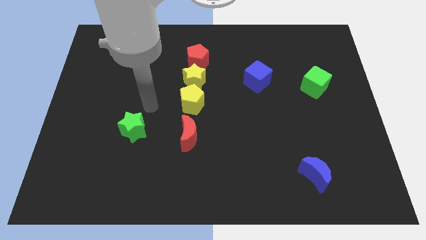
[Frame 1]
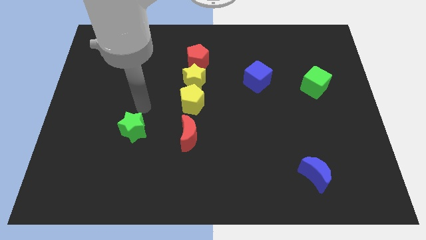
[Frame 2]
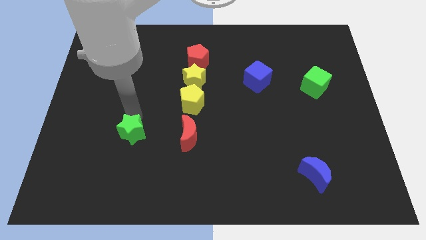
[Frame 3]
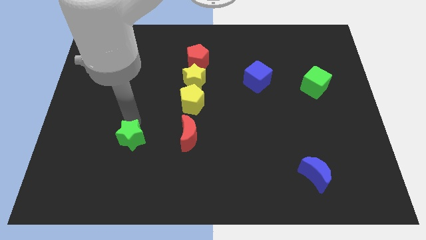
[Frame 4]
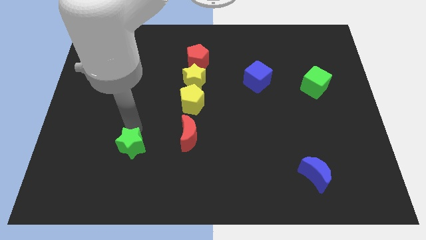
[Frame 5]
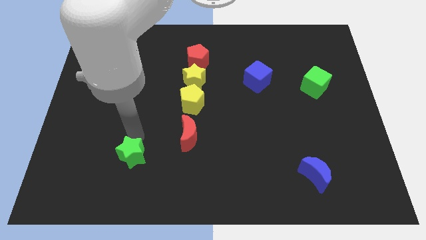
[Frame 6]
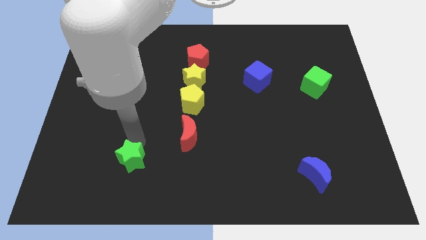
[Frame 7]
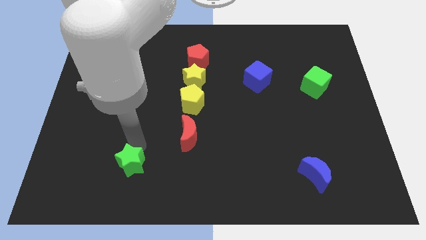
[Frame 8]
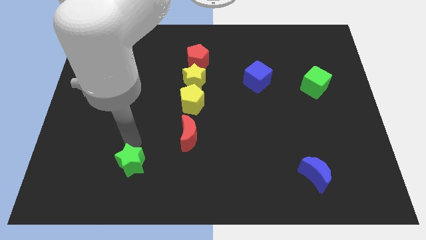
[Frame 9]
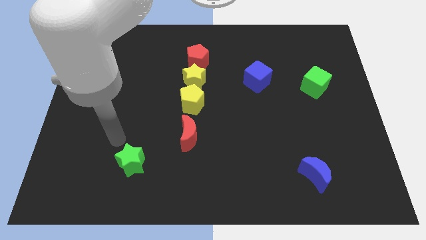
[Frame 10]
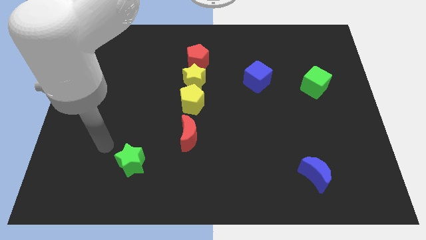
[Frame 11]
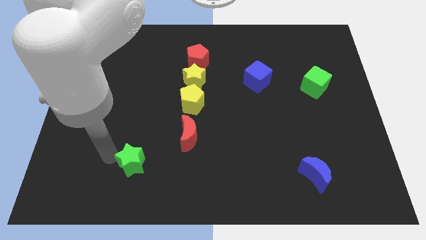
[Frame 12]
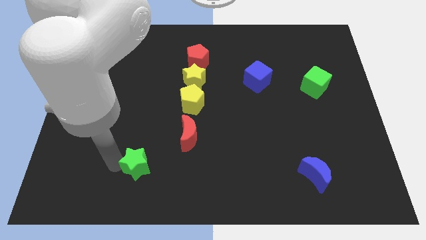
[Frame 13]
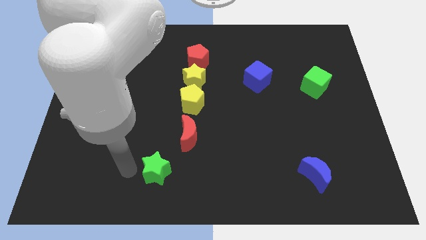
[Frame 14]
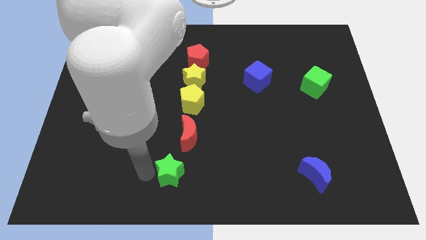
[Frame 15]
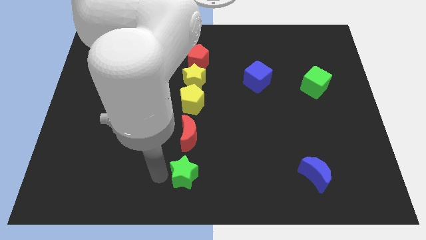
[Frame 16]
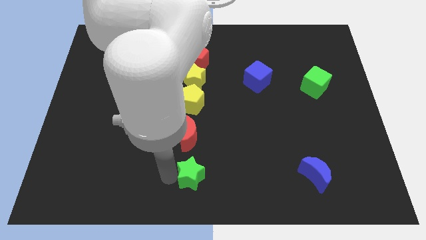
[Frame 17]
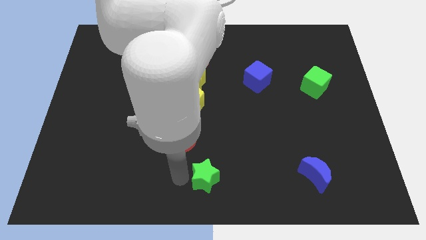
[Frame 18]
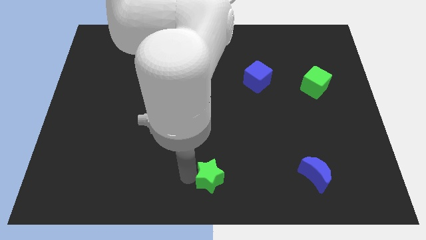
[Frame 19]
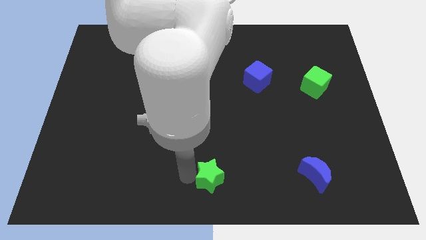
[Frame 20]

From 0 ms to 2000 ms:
push the green star towards the right of red moon

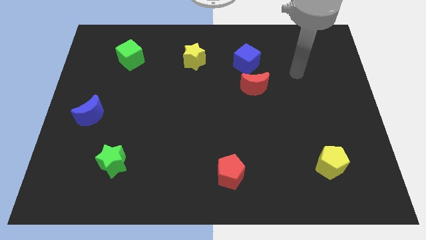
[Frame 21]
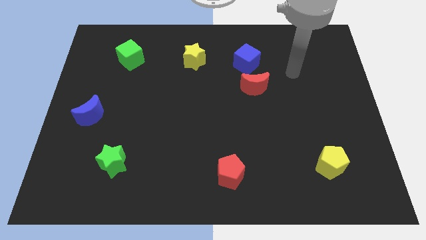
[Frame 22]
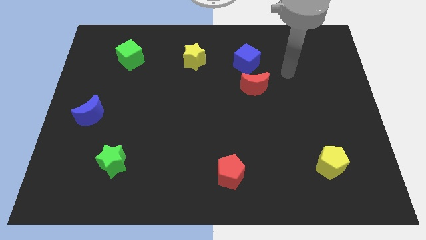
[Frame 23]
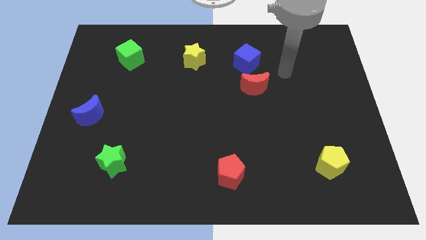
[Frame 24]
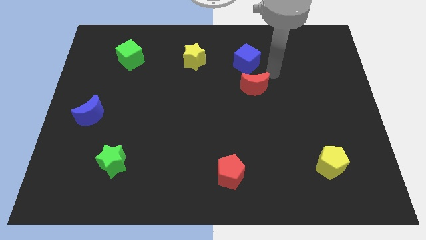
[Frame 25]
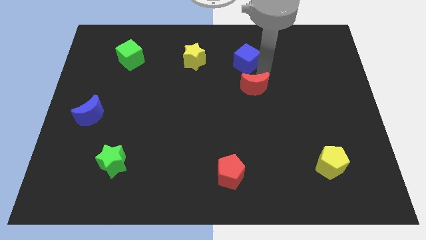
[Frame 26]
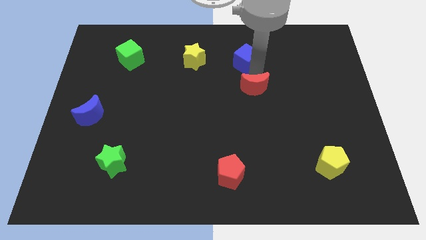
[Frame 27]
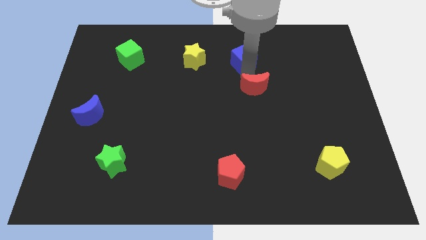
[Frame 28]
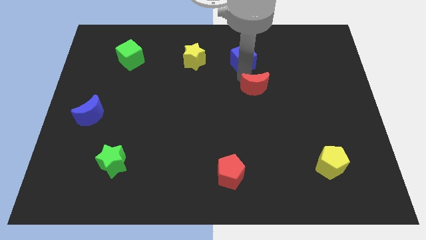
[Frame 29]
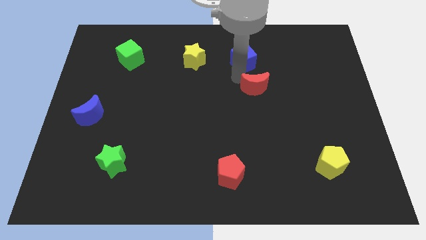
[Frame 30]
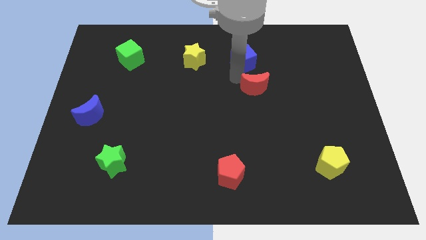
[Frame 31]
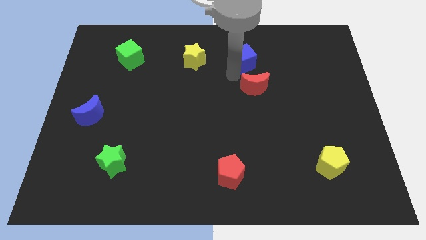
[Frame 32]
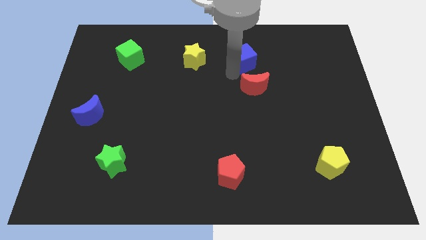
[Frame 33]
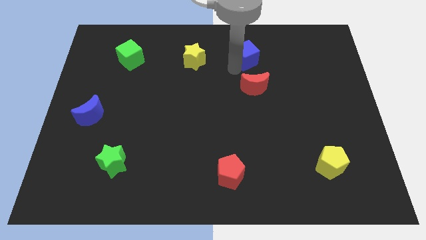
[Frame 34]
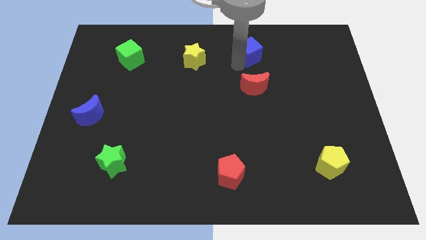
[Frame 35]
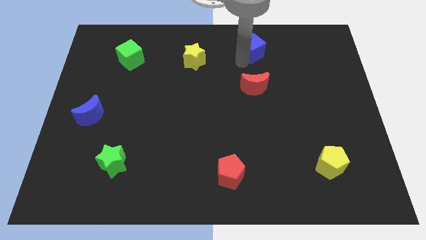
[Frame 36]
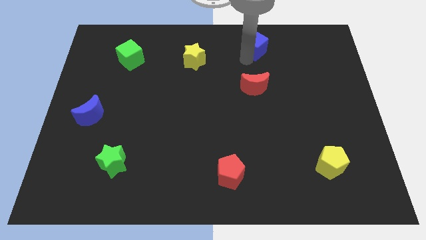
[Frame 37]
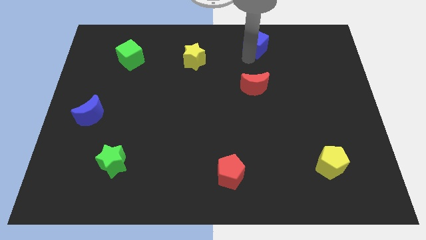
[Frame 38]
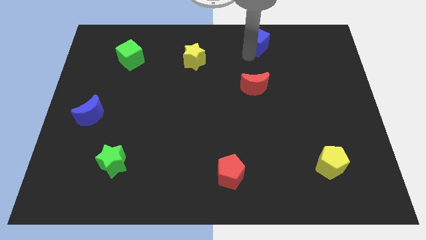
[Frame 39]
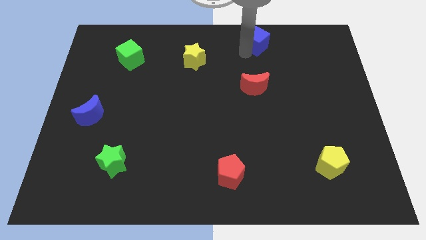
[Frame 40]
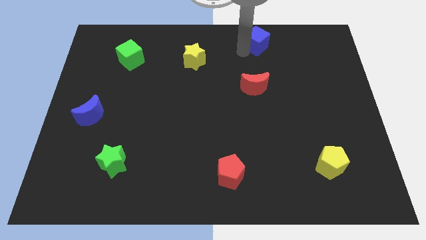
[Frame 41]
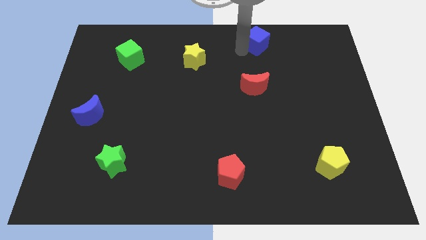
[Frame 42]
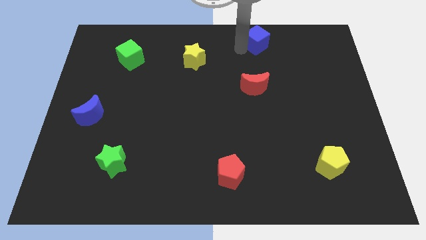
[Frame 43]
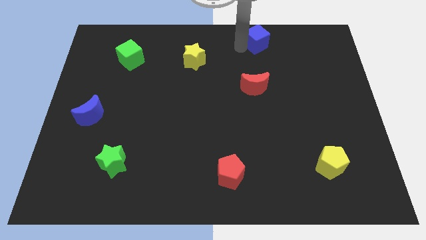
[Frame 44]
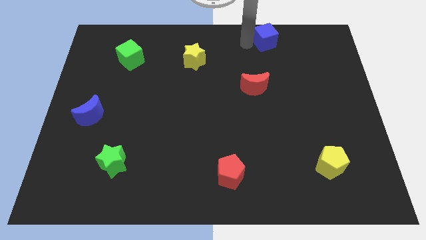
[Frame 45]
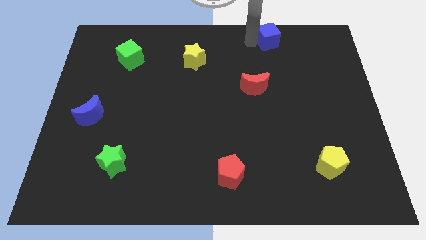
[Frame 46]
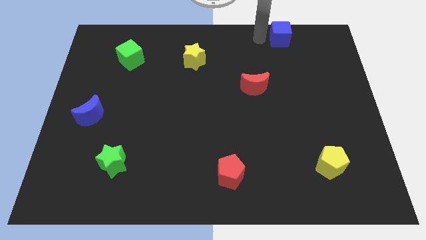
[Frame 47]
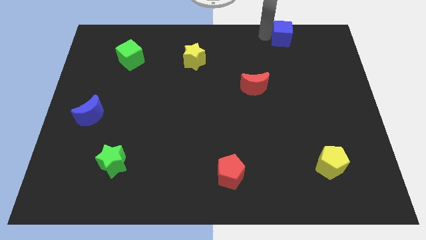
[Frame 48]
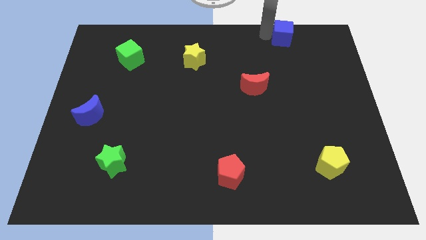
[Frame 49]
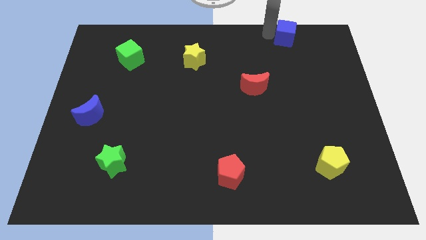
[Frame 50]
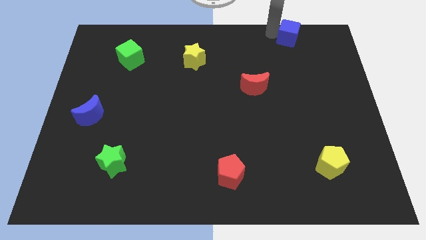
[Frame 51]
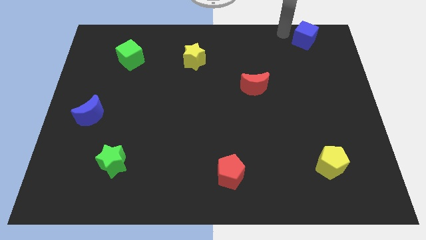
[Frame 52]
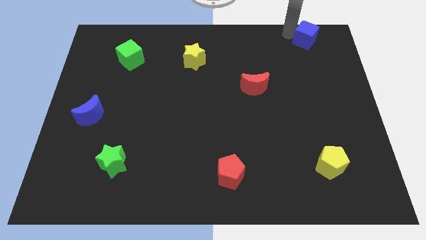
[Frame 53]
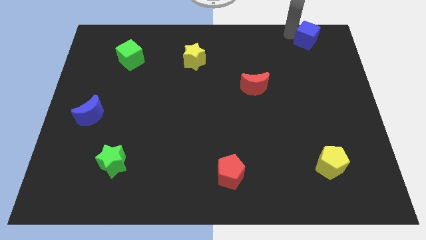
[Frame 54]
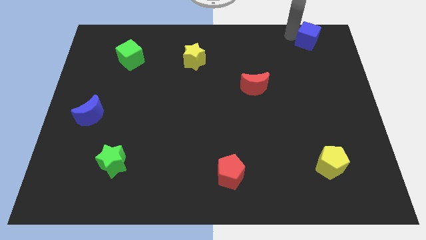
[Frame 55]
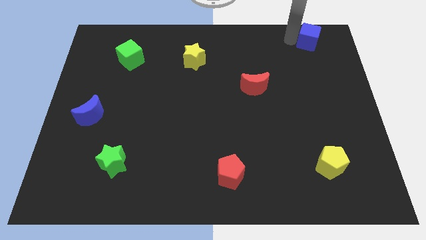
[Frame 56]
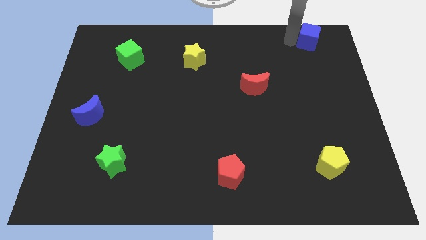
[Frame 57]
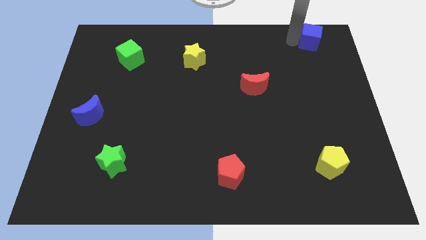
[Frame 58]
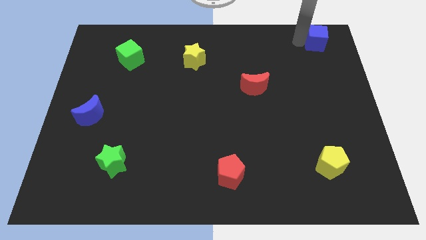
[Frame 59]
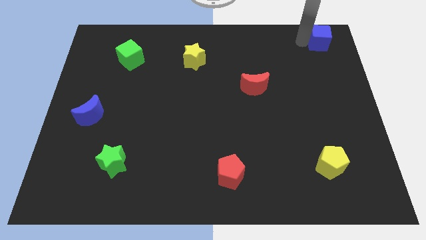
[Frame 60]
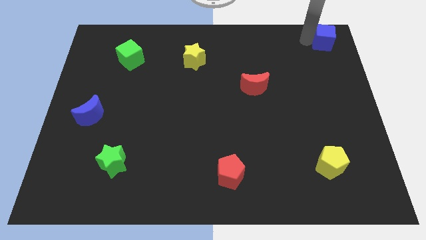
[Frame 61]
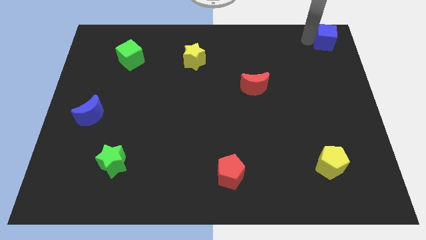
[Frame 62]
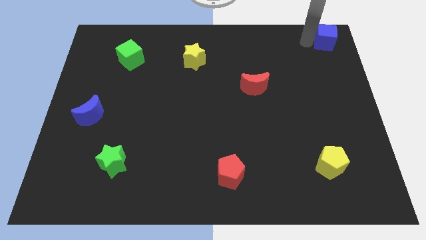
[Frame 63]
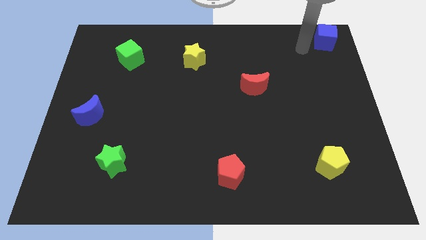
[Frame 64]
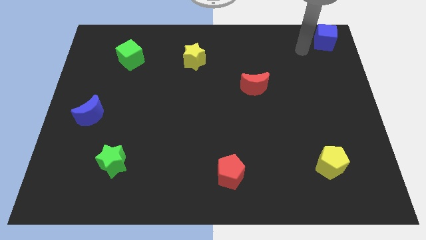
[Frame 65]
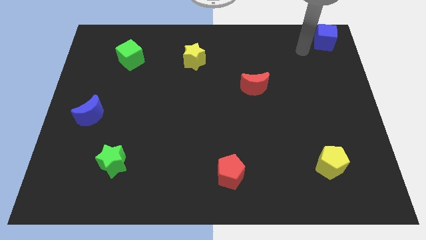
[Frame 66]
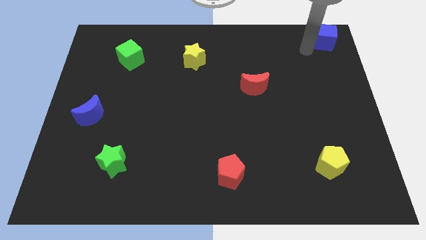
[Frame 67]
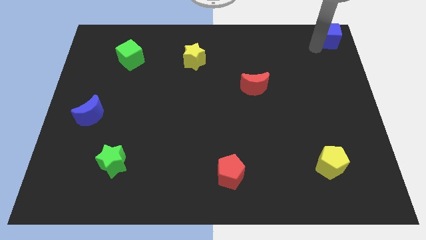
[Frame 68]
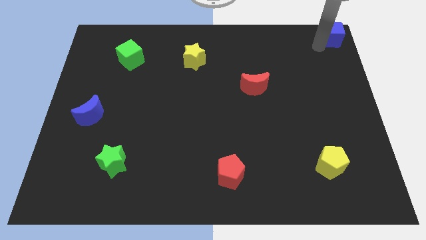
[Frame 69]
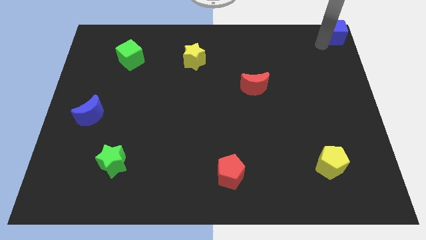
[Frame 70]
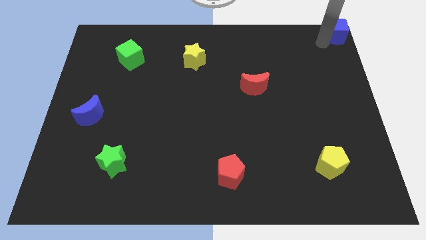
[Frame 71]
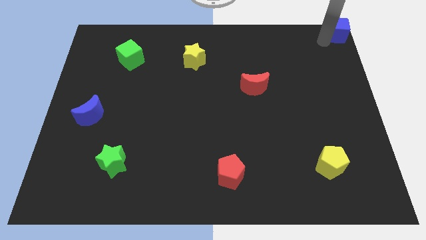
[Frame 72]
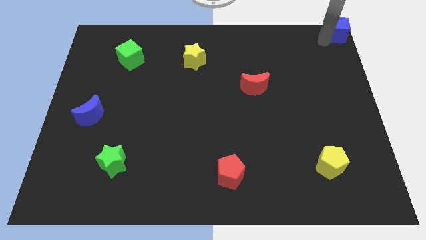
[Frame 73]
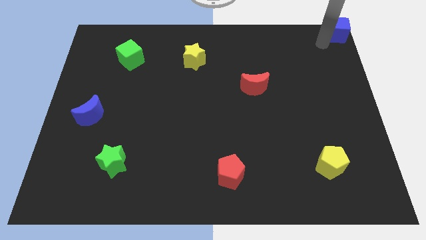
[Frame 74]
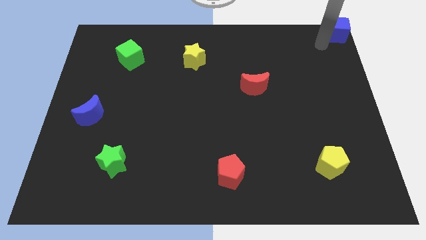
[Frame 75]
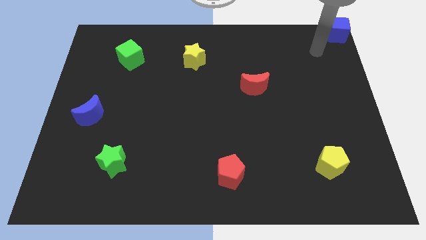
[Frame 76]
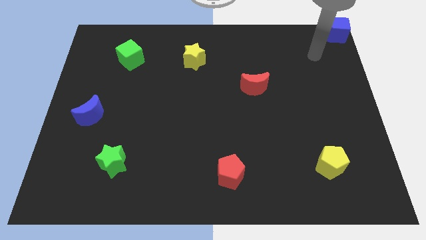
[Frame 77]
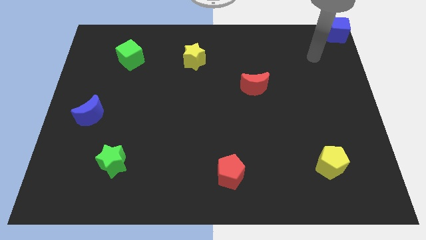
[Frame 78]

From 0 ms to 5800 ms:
place the blue cube to the top right corner of the board

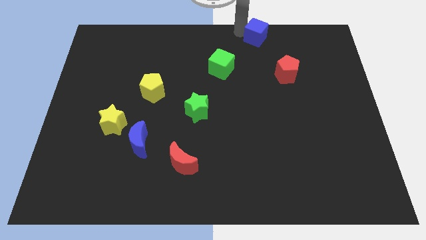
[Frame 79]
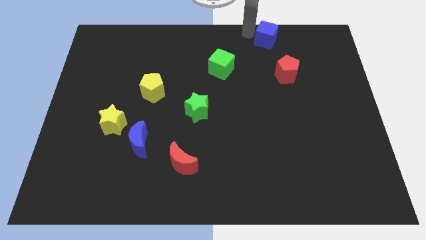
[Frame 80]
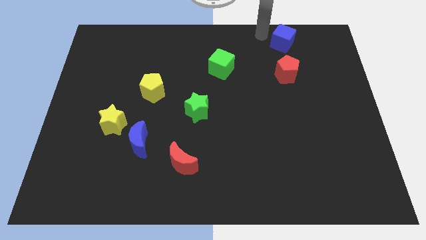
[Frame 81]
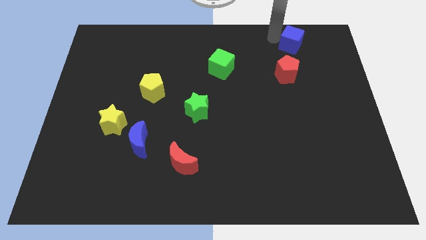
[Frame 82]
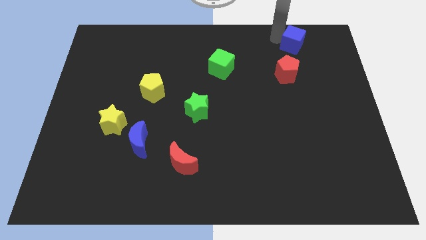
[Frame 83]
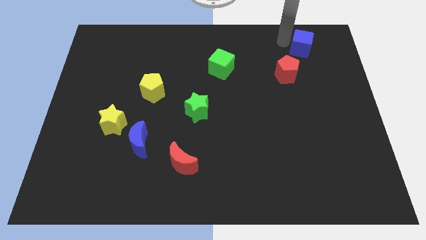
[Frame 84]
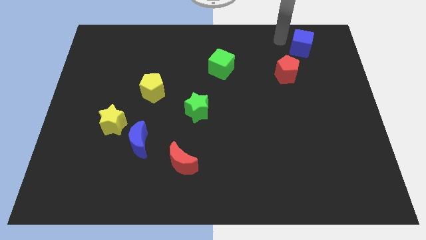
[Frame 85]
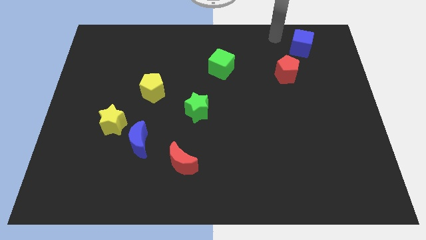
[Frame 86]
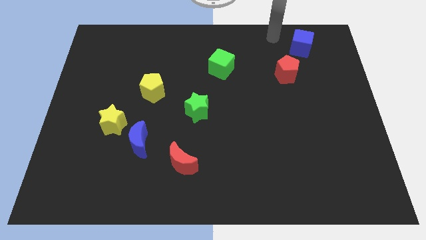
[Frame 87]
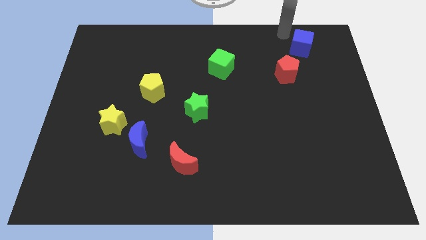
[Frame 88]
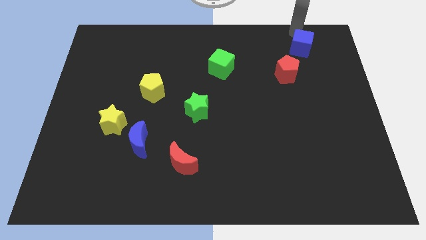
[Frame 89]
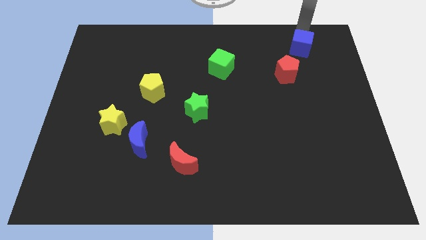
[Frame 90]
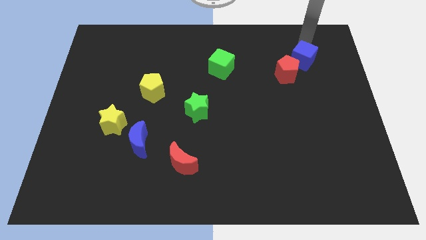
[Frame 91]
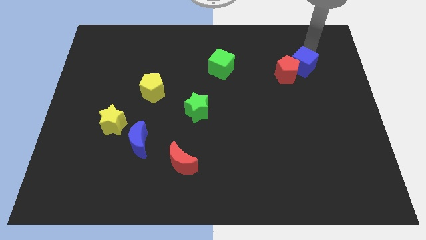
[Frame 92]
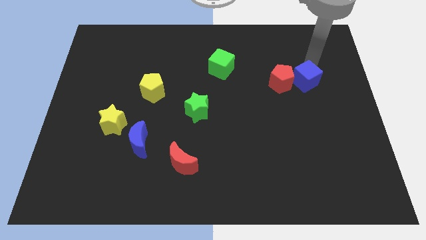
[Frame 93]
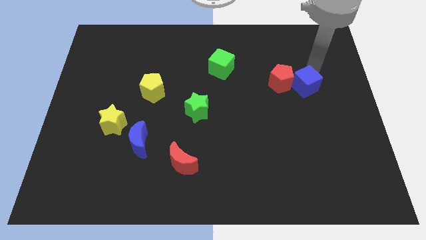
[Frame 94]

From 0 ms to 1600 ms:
push the blue cube into the red pentagon
